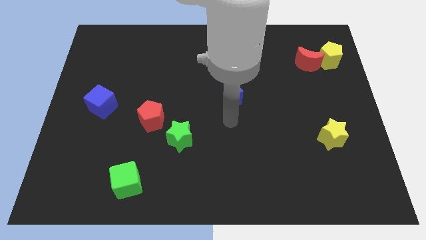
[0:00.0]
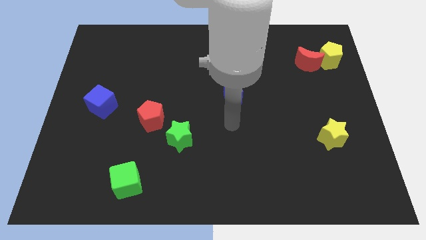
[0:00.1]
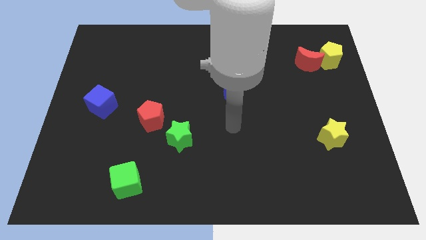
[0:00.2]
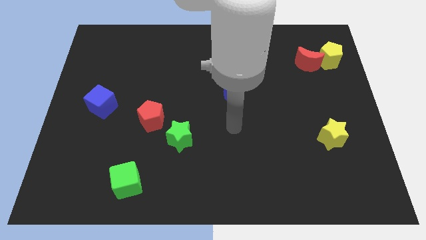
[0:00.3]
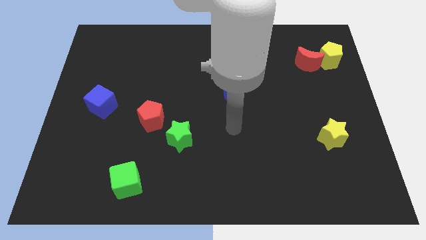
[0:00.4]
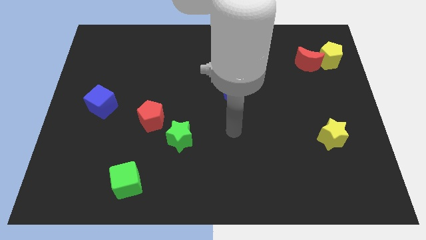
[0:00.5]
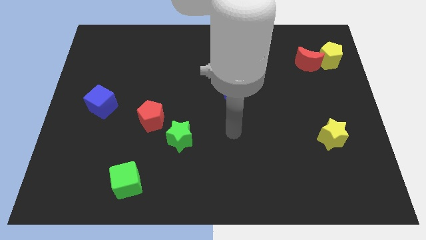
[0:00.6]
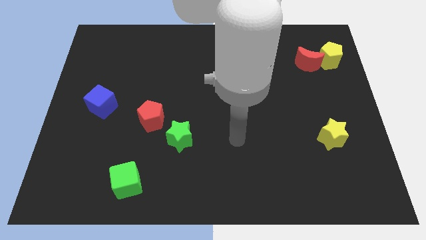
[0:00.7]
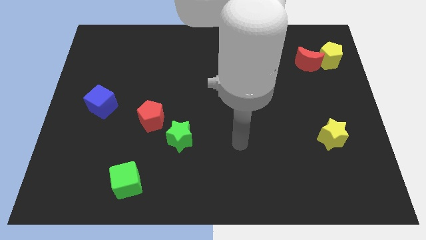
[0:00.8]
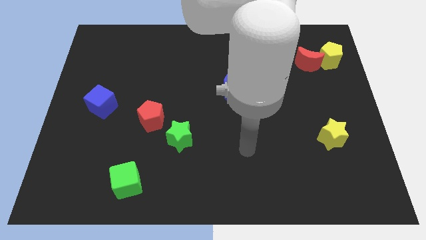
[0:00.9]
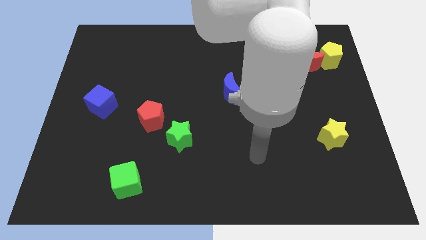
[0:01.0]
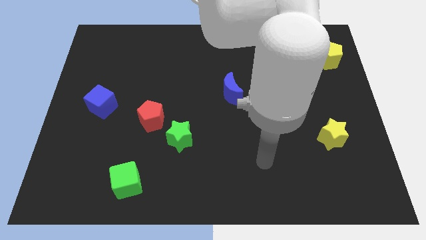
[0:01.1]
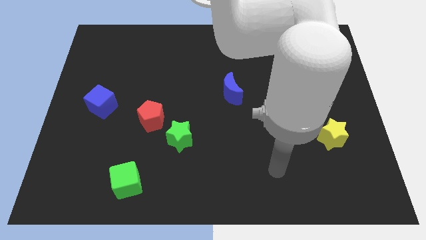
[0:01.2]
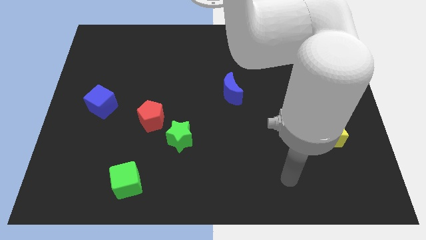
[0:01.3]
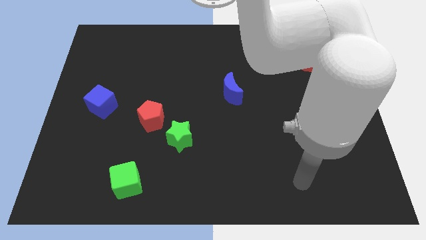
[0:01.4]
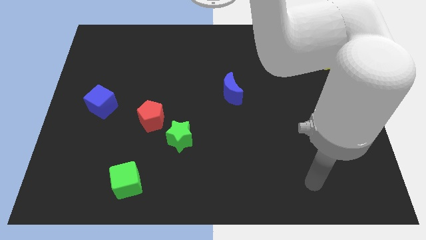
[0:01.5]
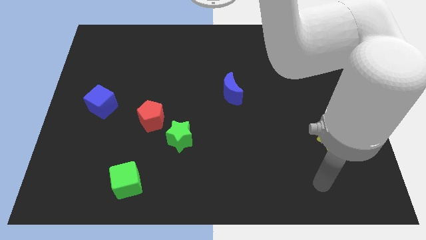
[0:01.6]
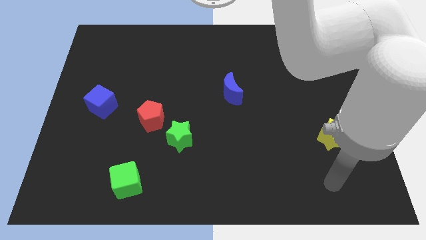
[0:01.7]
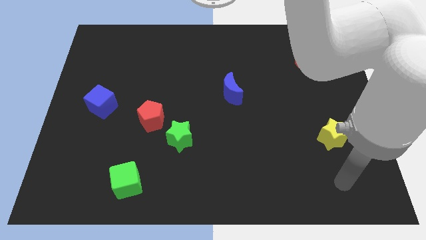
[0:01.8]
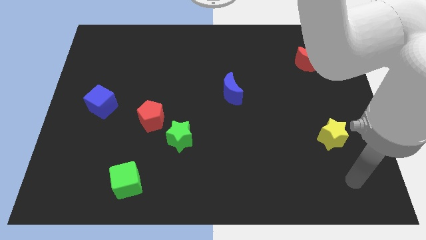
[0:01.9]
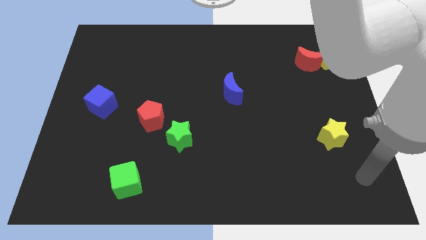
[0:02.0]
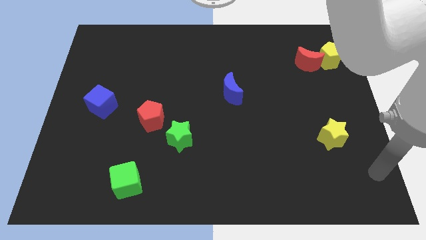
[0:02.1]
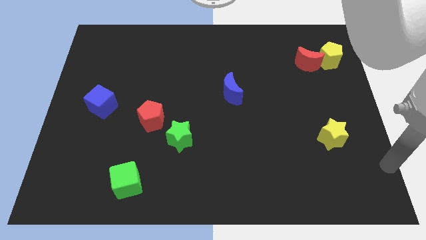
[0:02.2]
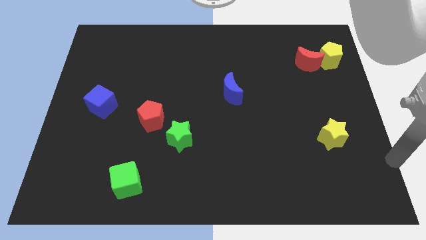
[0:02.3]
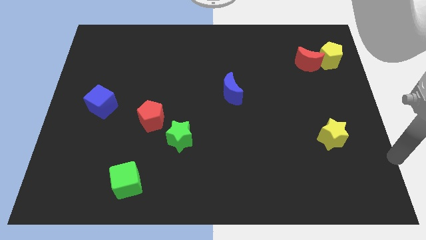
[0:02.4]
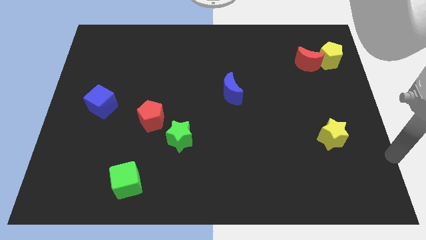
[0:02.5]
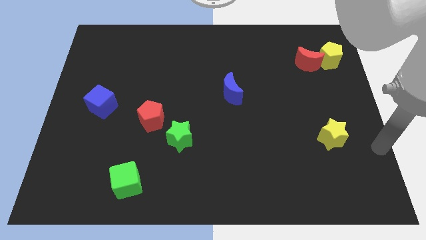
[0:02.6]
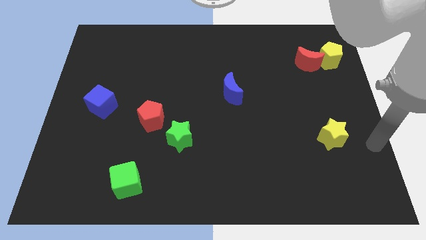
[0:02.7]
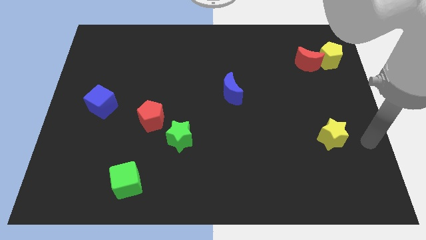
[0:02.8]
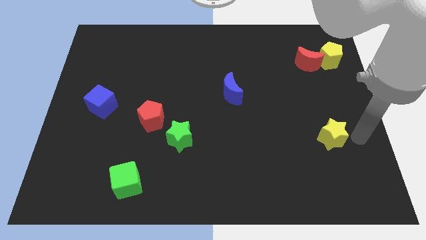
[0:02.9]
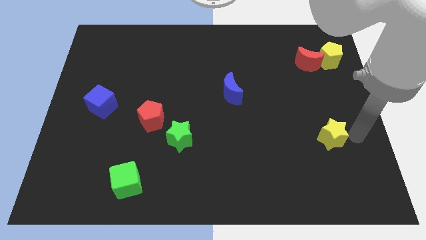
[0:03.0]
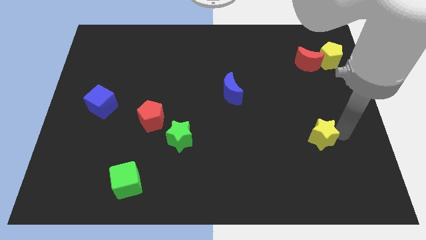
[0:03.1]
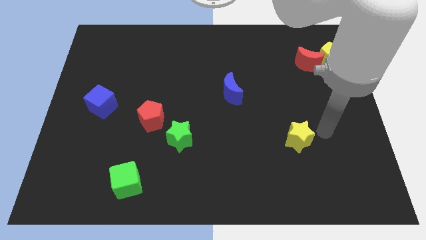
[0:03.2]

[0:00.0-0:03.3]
push the yellow star slightly to the left

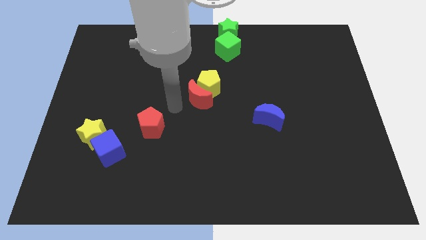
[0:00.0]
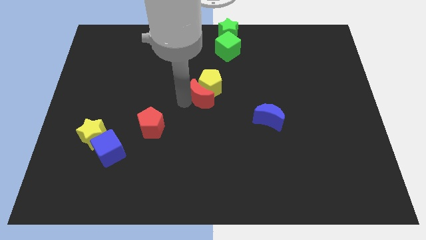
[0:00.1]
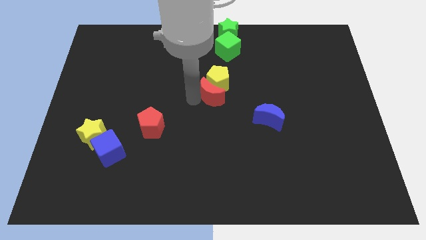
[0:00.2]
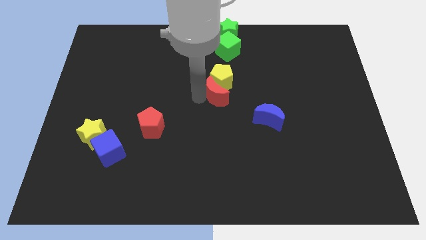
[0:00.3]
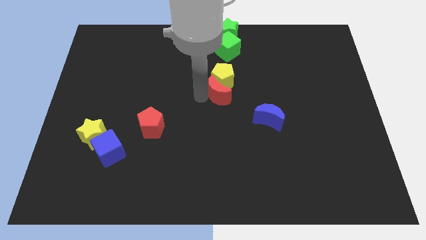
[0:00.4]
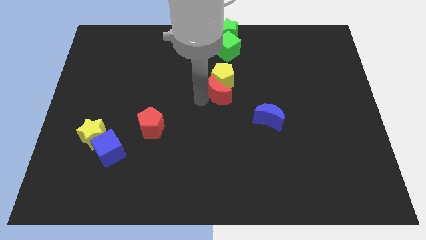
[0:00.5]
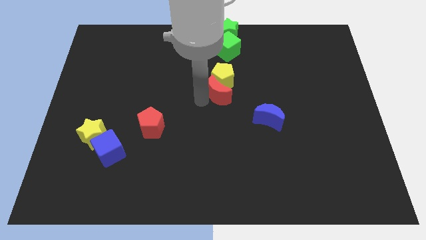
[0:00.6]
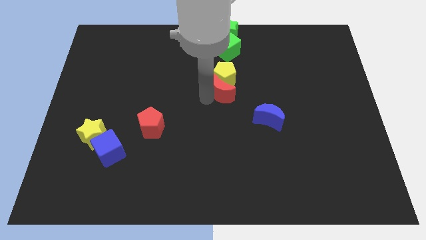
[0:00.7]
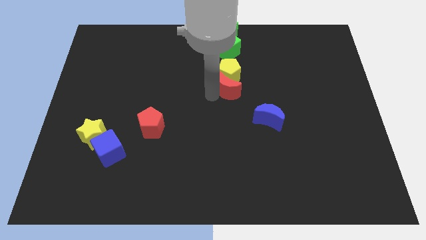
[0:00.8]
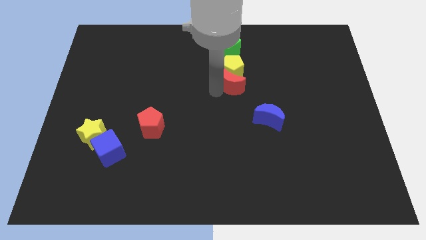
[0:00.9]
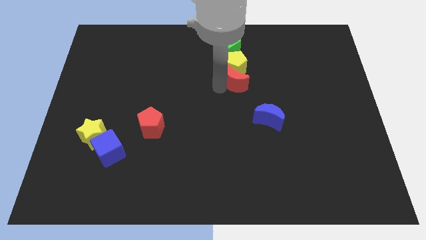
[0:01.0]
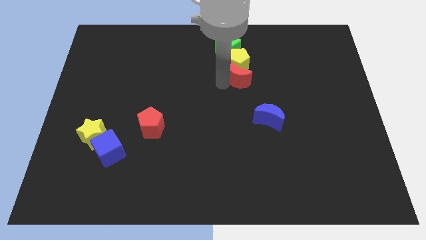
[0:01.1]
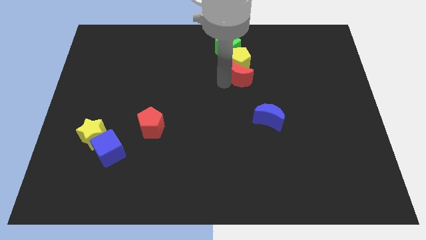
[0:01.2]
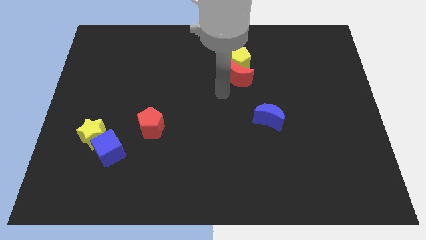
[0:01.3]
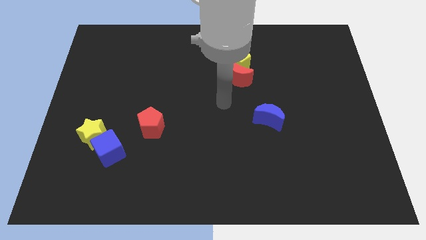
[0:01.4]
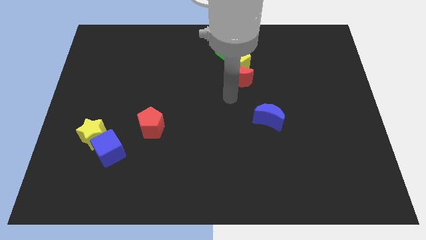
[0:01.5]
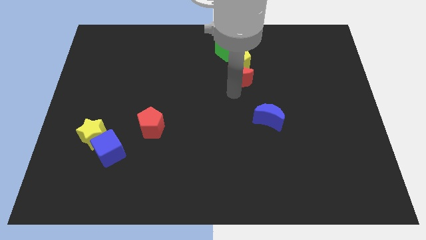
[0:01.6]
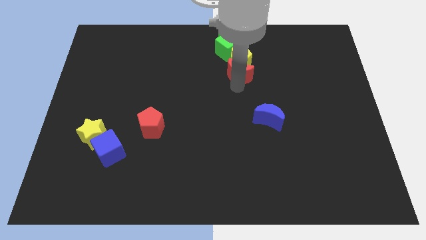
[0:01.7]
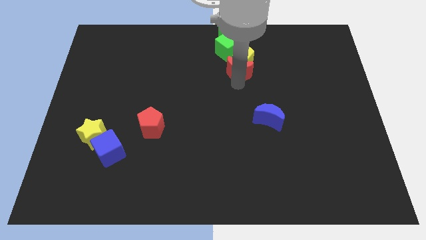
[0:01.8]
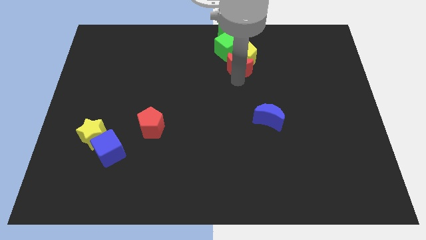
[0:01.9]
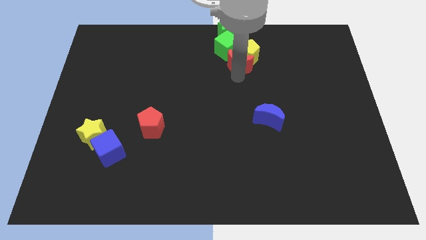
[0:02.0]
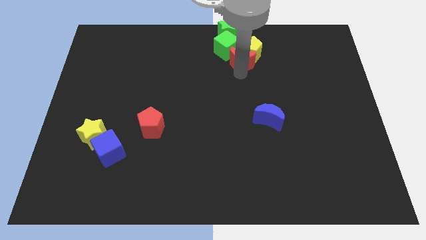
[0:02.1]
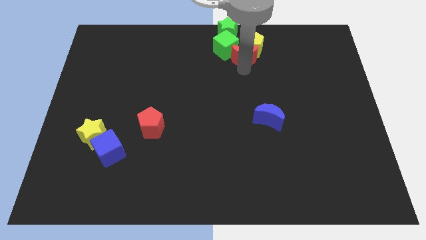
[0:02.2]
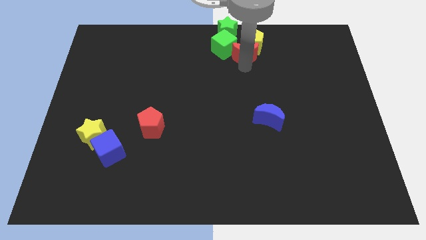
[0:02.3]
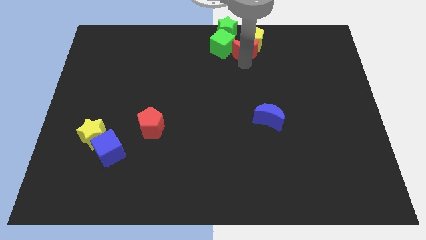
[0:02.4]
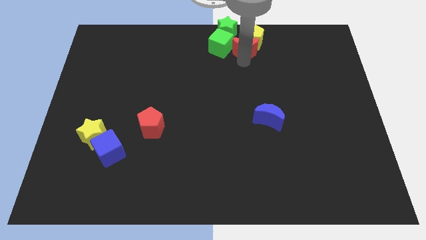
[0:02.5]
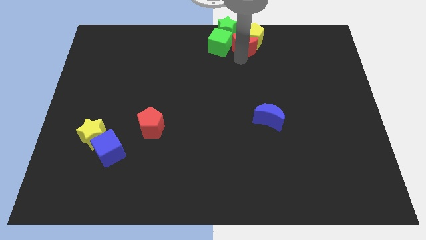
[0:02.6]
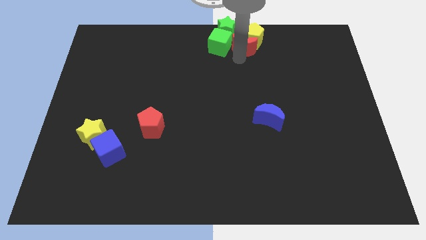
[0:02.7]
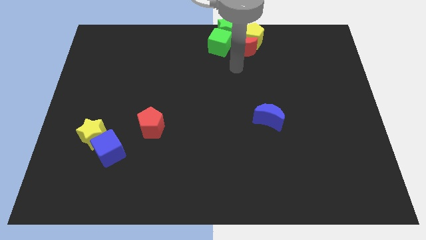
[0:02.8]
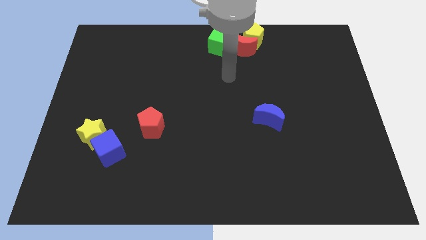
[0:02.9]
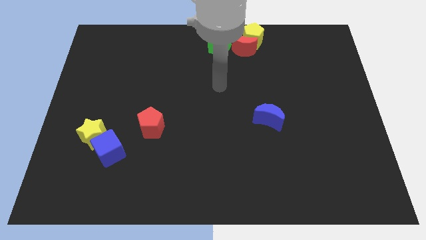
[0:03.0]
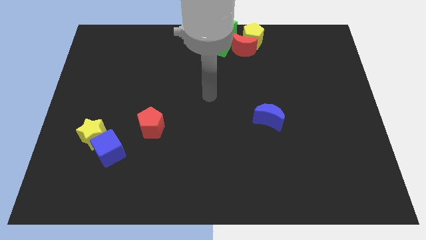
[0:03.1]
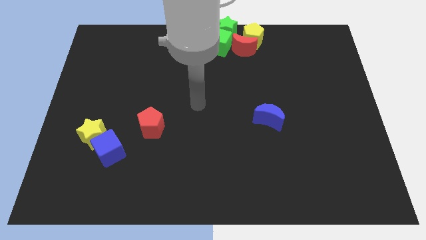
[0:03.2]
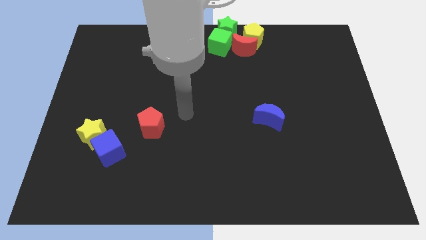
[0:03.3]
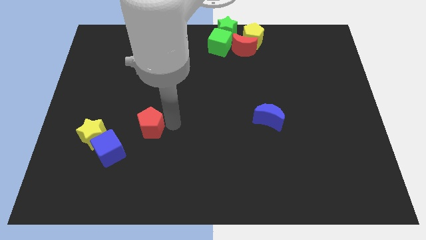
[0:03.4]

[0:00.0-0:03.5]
move yellow pentagon and red moon to the top center of the board

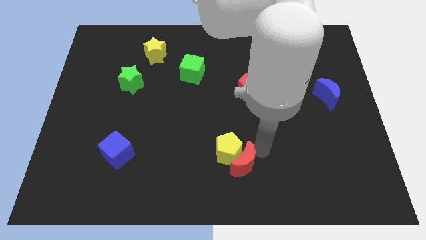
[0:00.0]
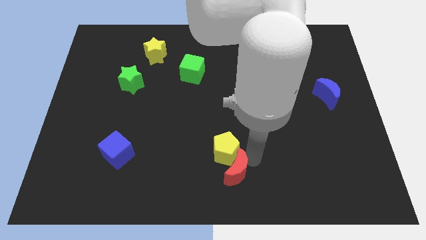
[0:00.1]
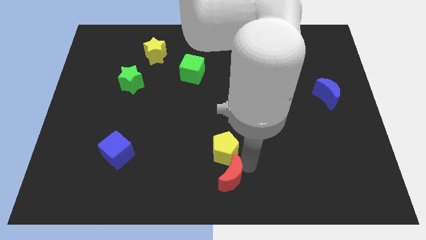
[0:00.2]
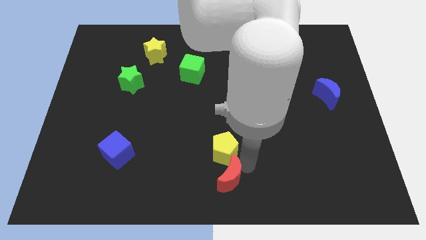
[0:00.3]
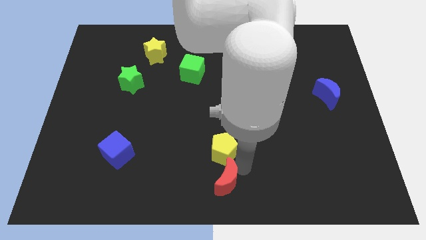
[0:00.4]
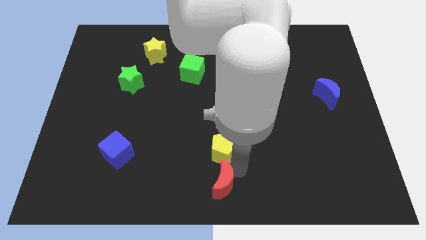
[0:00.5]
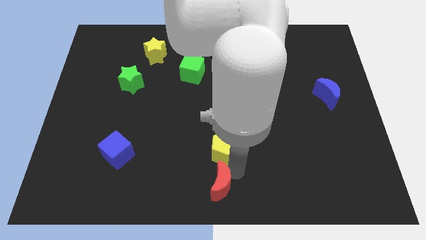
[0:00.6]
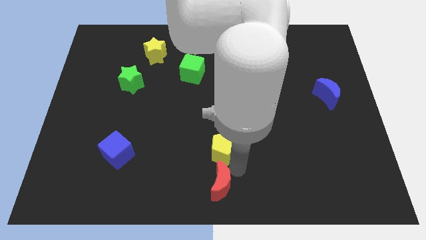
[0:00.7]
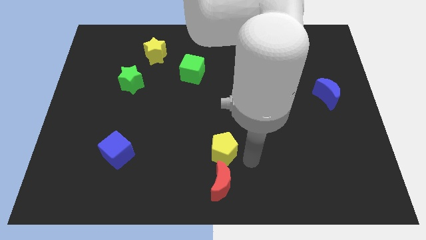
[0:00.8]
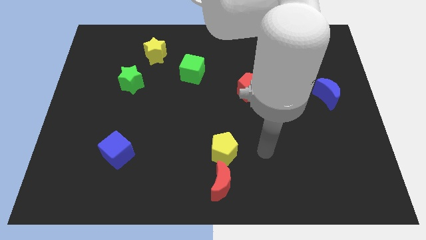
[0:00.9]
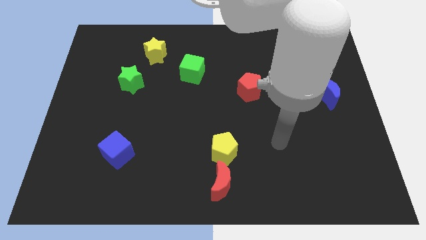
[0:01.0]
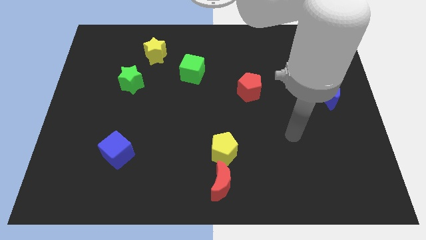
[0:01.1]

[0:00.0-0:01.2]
move the red moon below the yellow pentagon

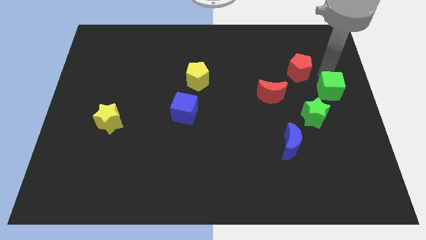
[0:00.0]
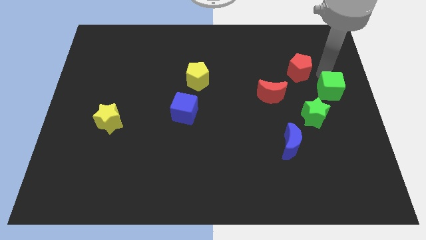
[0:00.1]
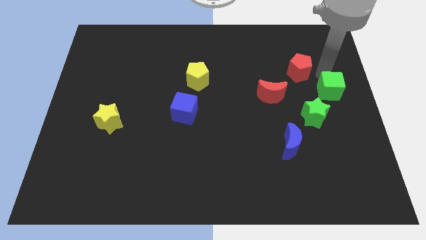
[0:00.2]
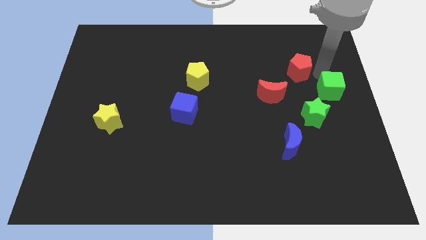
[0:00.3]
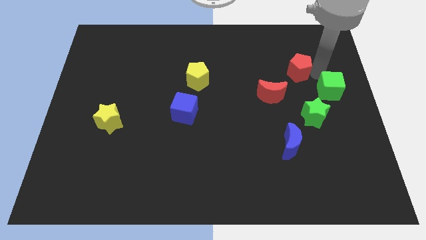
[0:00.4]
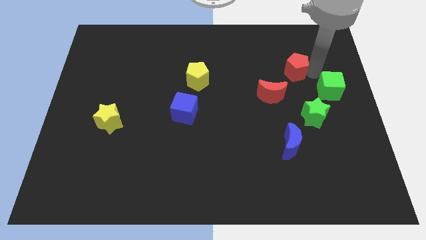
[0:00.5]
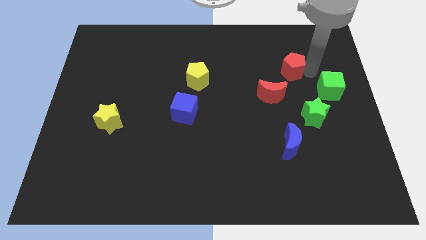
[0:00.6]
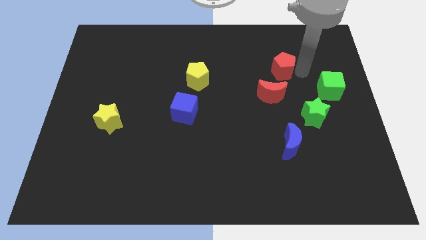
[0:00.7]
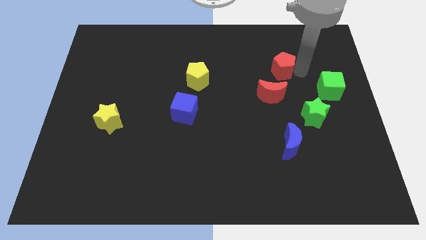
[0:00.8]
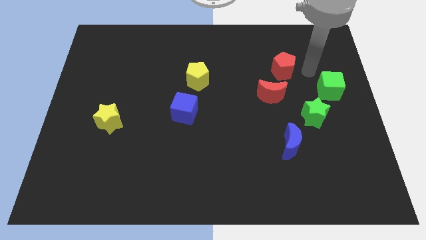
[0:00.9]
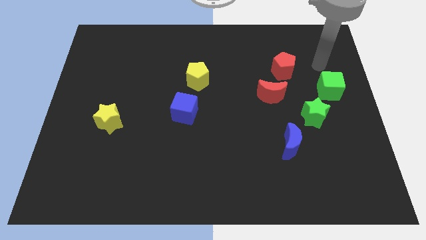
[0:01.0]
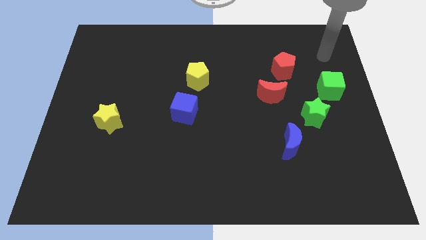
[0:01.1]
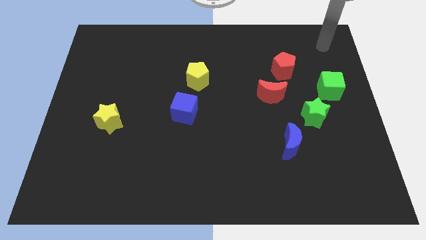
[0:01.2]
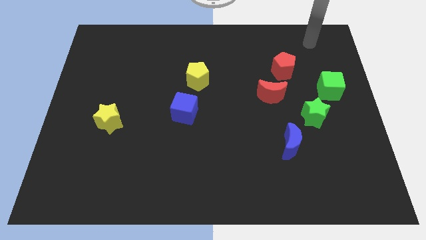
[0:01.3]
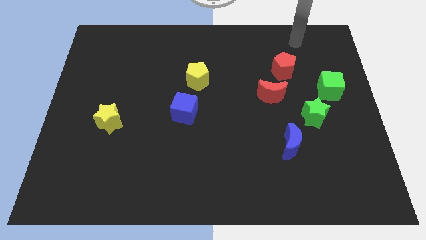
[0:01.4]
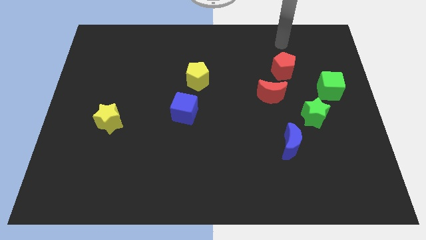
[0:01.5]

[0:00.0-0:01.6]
place the red pentagon above the red crescent
